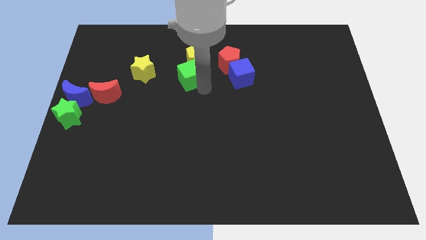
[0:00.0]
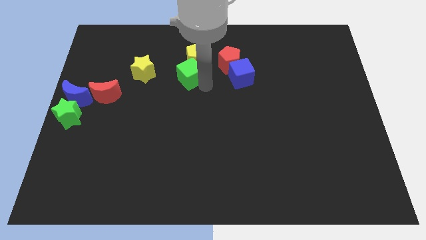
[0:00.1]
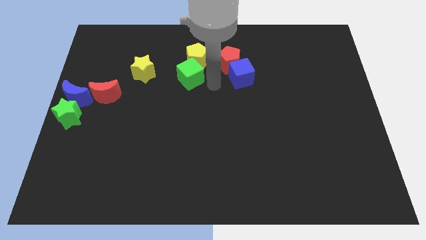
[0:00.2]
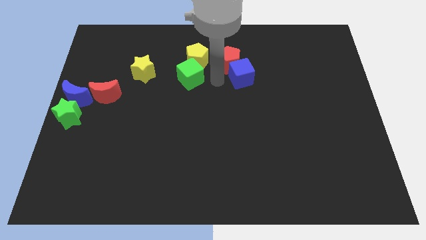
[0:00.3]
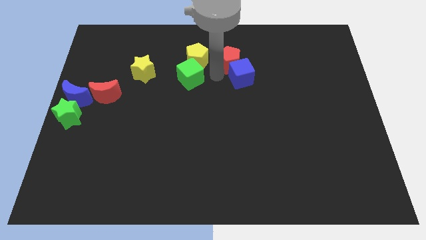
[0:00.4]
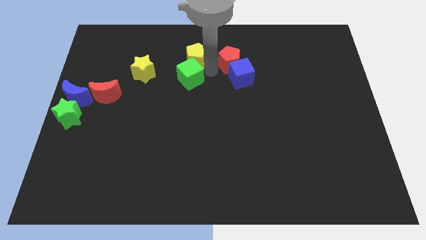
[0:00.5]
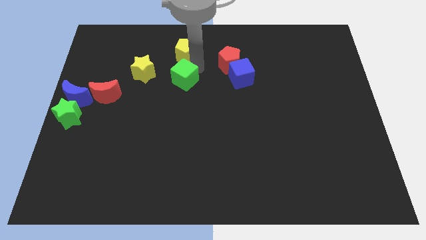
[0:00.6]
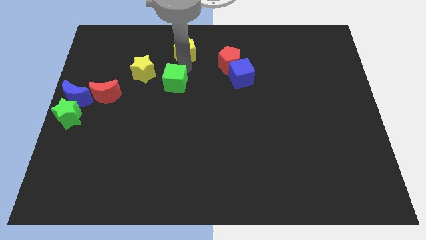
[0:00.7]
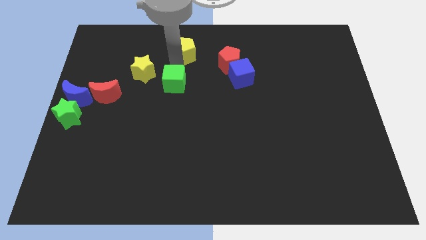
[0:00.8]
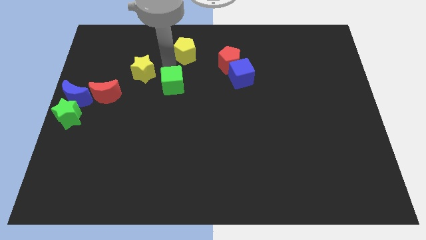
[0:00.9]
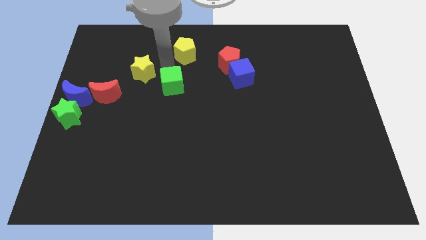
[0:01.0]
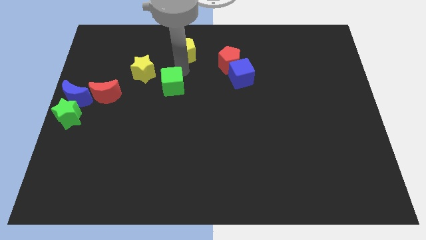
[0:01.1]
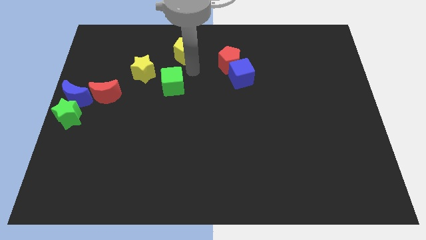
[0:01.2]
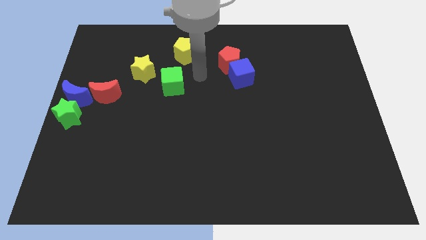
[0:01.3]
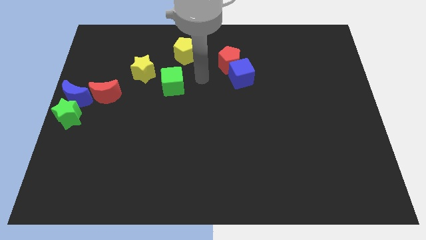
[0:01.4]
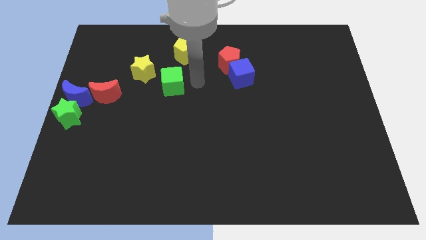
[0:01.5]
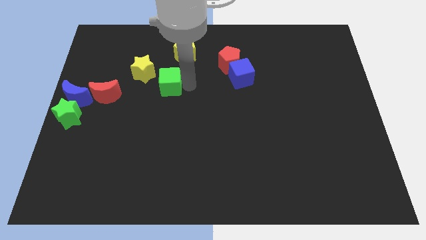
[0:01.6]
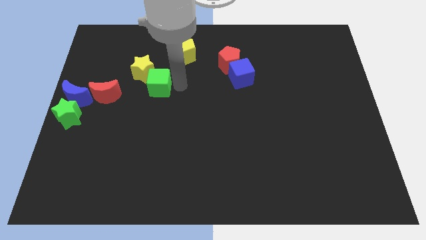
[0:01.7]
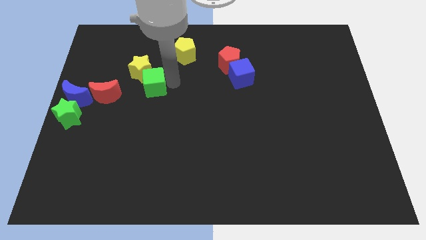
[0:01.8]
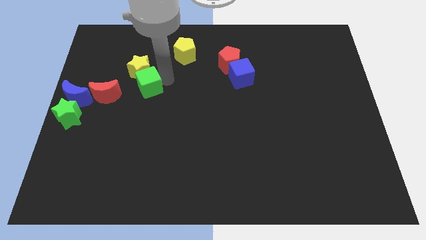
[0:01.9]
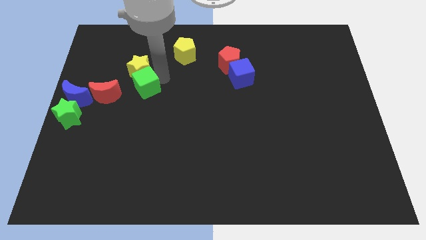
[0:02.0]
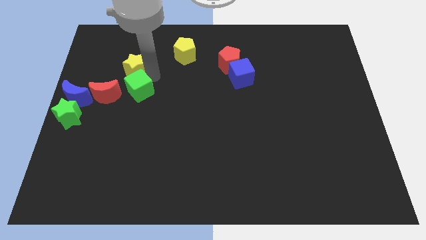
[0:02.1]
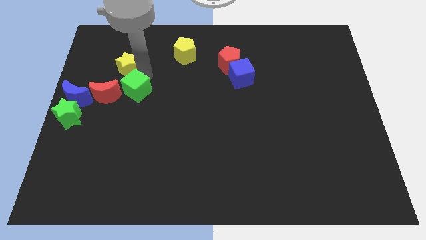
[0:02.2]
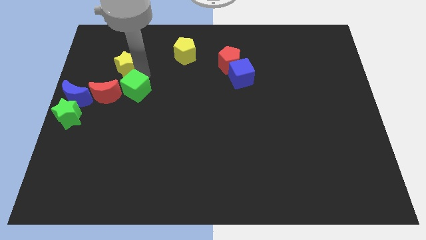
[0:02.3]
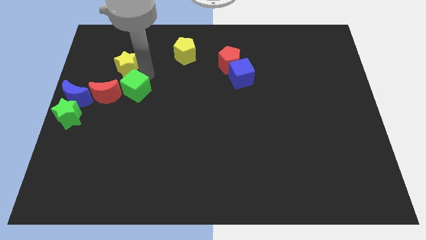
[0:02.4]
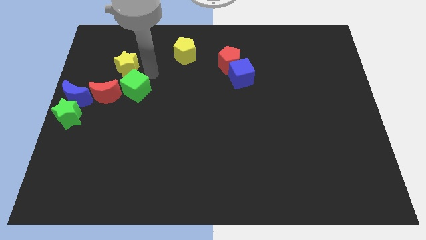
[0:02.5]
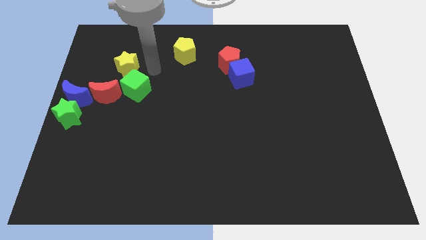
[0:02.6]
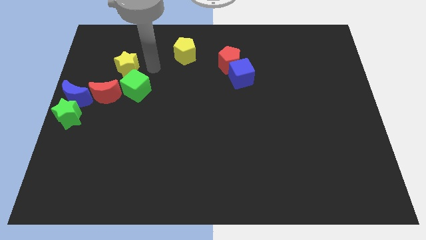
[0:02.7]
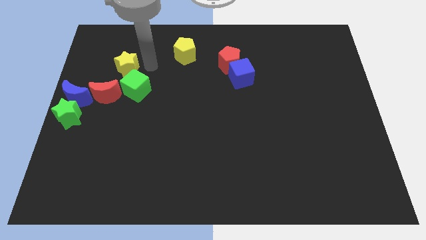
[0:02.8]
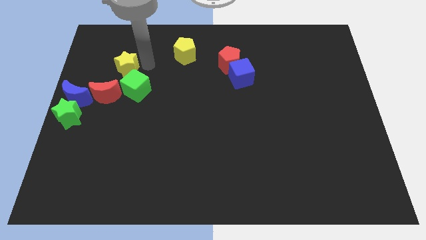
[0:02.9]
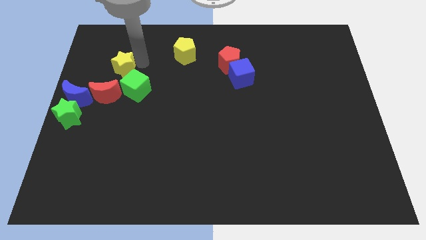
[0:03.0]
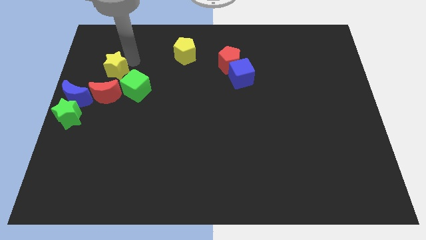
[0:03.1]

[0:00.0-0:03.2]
move the green cube right to the red crescent

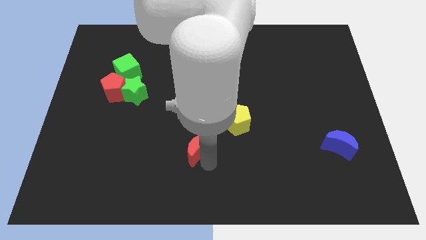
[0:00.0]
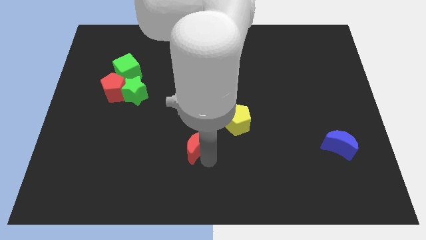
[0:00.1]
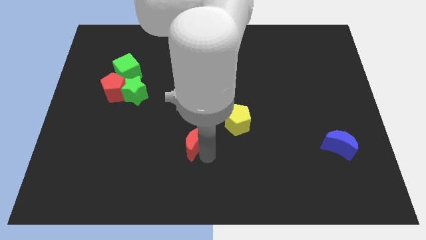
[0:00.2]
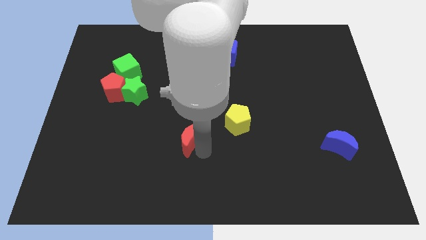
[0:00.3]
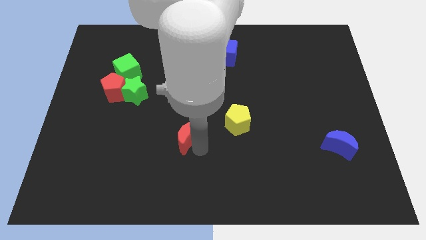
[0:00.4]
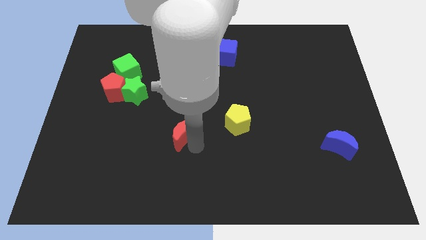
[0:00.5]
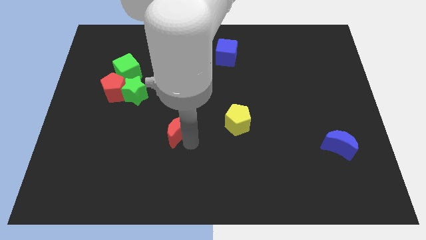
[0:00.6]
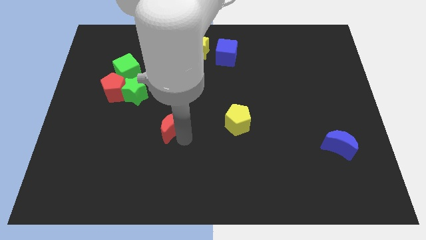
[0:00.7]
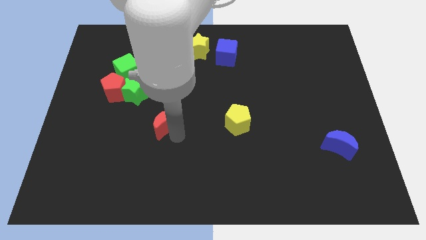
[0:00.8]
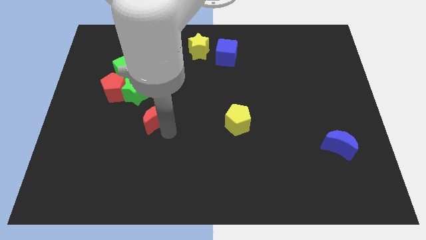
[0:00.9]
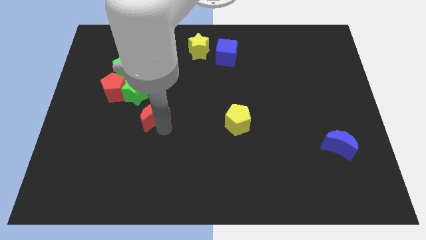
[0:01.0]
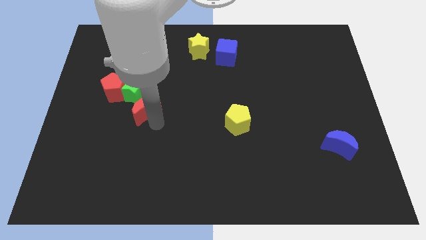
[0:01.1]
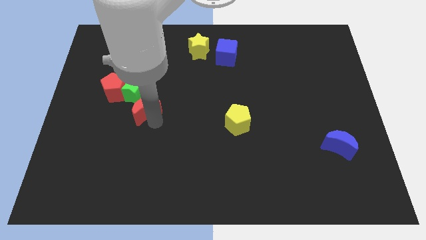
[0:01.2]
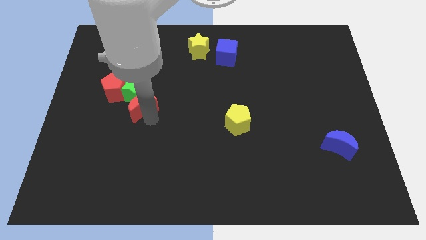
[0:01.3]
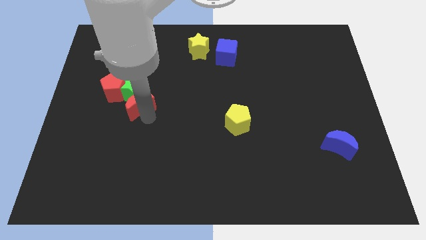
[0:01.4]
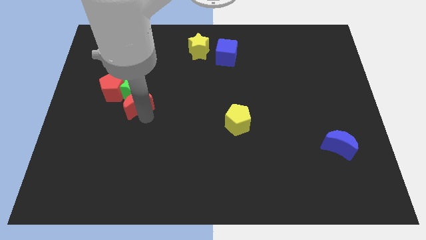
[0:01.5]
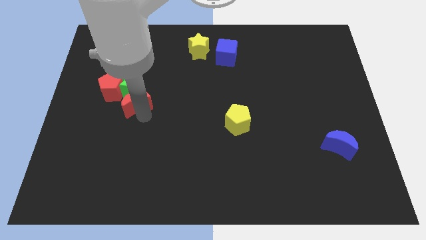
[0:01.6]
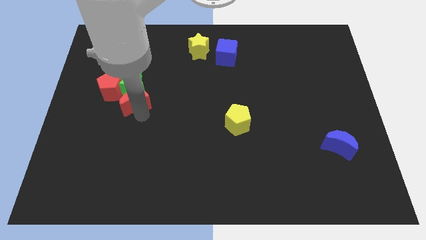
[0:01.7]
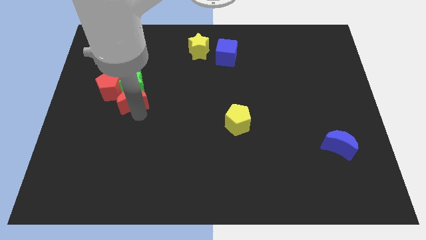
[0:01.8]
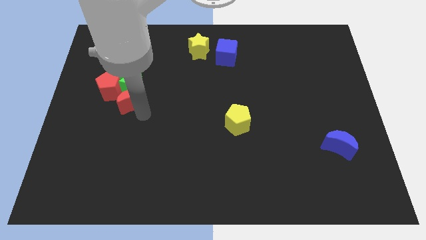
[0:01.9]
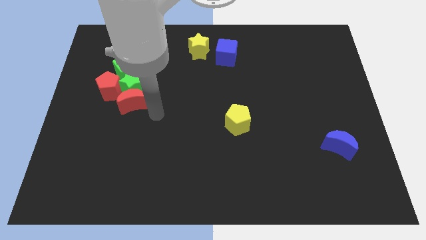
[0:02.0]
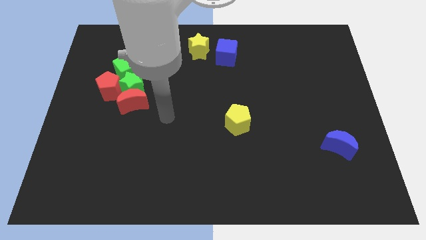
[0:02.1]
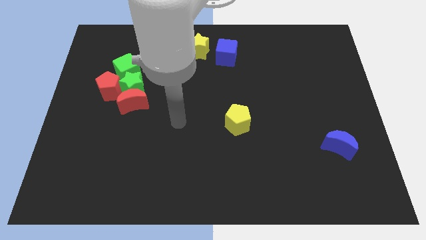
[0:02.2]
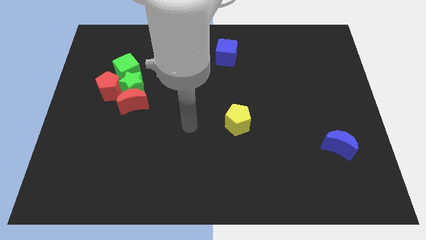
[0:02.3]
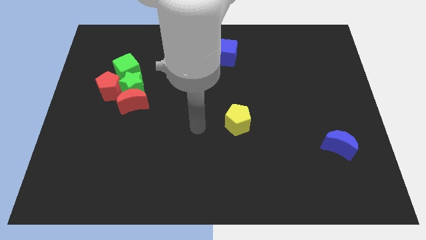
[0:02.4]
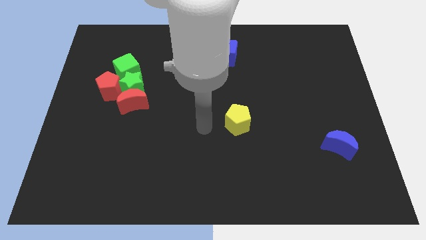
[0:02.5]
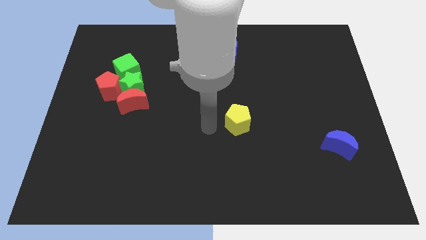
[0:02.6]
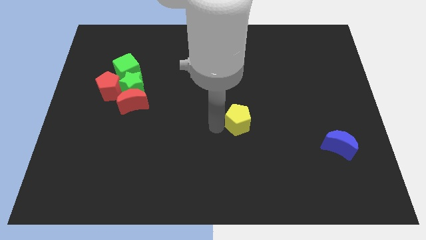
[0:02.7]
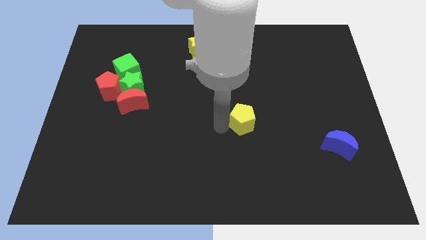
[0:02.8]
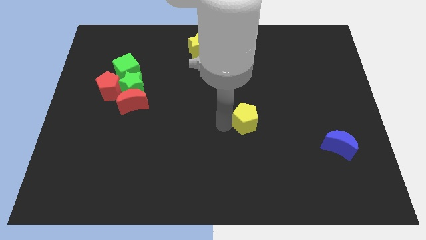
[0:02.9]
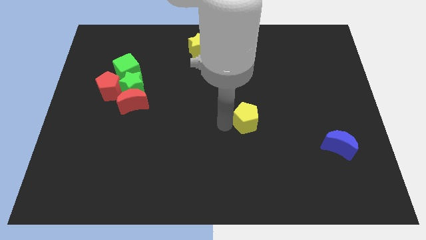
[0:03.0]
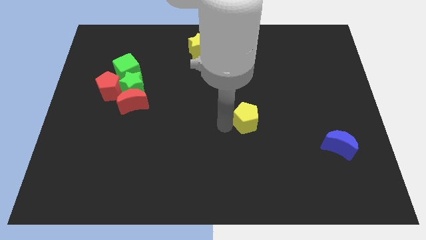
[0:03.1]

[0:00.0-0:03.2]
move the red moon down to the green star

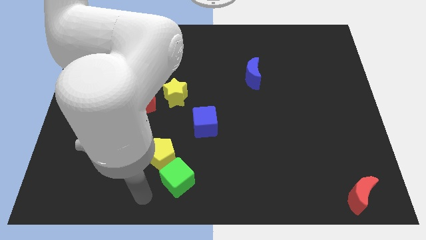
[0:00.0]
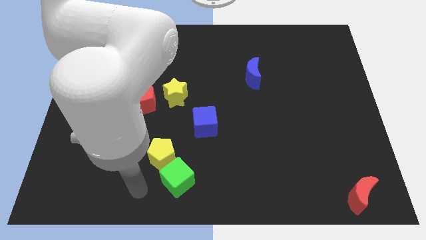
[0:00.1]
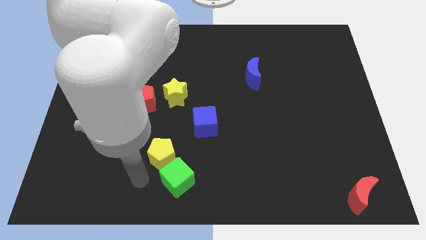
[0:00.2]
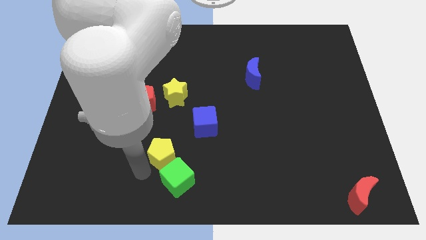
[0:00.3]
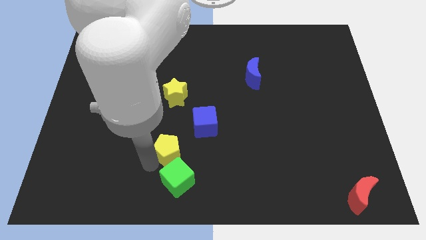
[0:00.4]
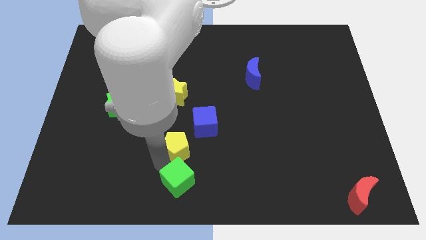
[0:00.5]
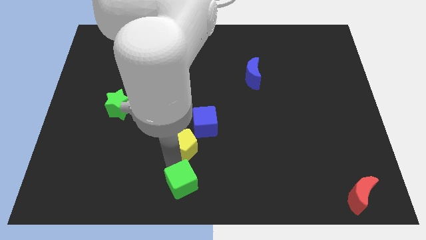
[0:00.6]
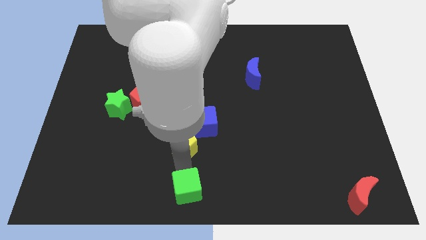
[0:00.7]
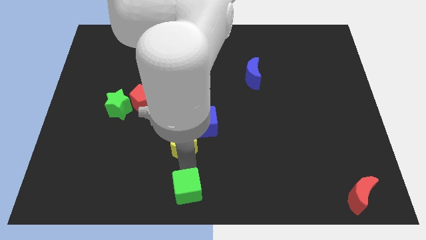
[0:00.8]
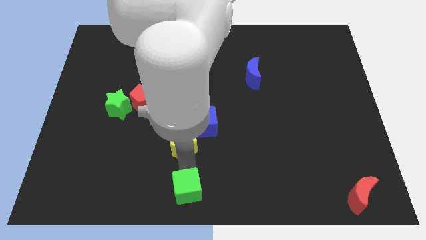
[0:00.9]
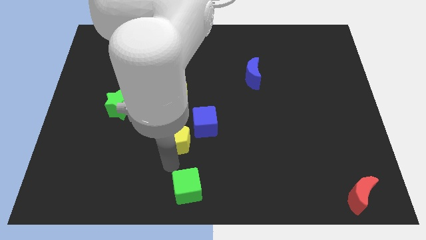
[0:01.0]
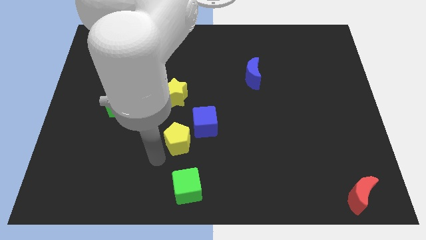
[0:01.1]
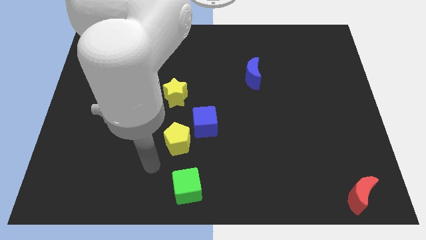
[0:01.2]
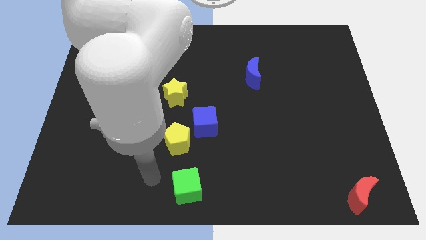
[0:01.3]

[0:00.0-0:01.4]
separate the green star and the yellow pentagon

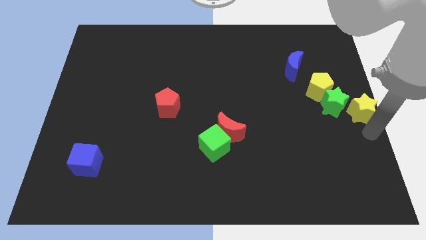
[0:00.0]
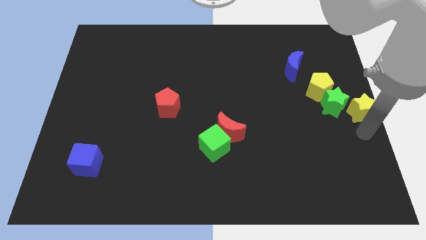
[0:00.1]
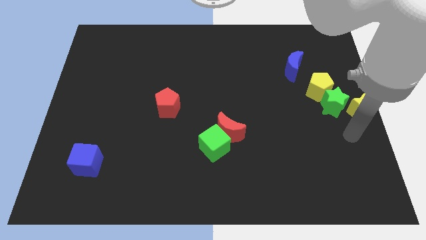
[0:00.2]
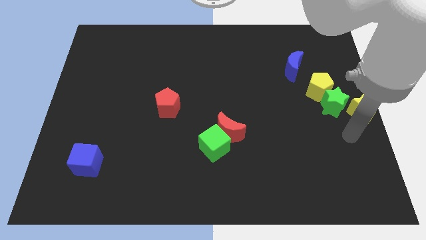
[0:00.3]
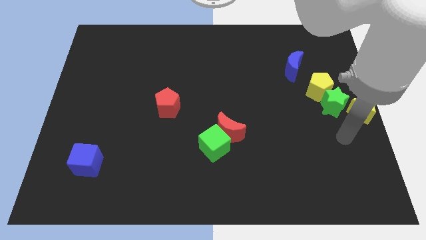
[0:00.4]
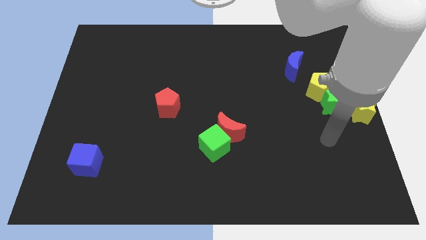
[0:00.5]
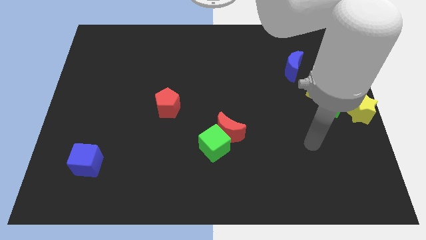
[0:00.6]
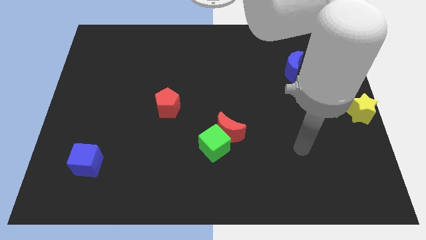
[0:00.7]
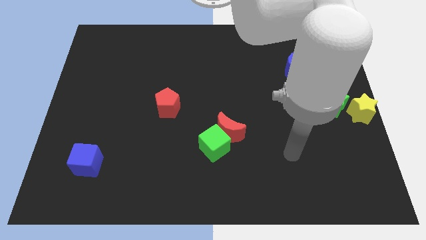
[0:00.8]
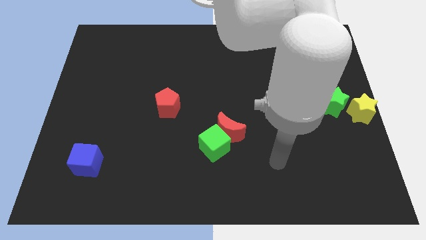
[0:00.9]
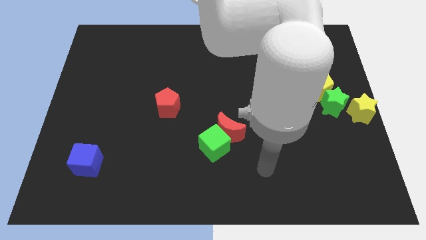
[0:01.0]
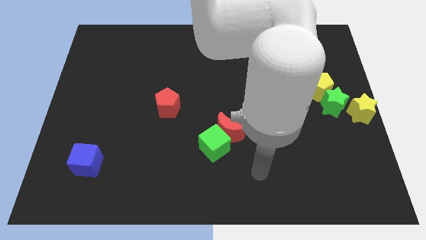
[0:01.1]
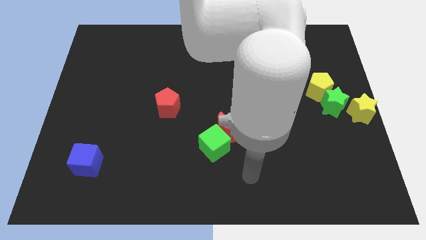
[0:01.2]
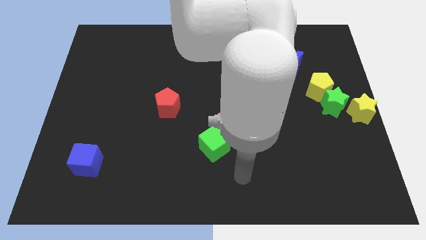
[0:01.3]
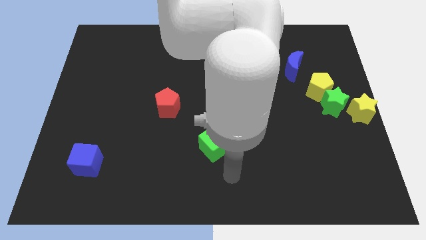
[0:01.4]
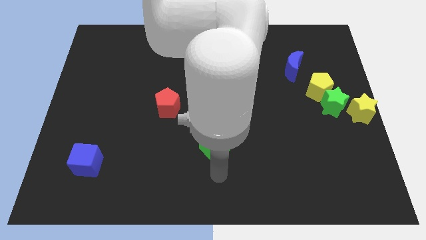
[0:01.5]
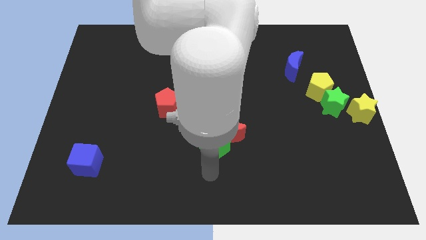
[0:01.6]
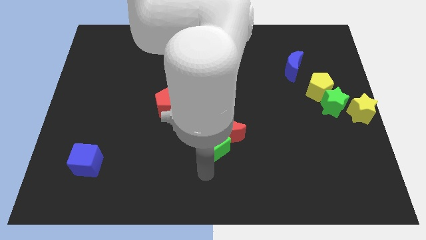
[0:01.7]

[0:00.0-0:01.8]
drag the arm from right center to bottom center
